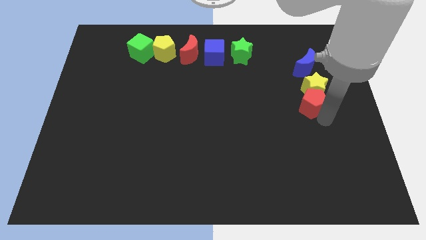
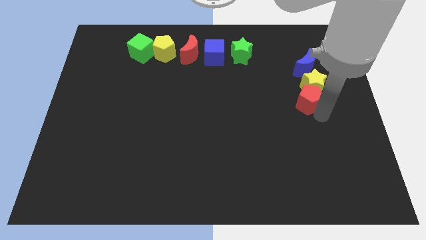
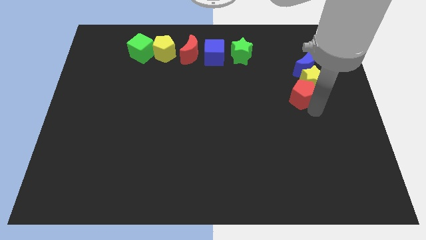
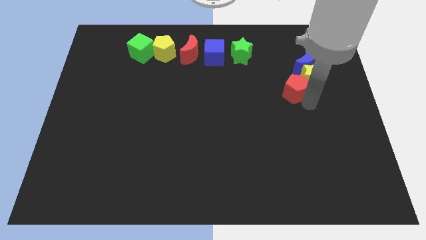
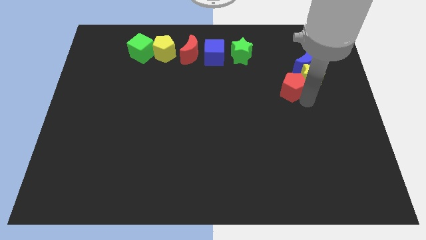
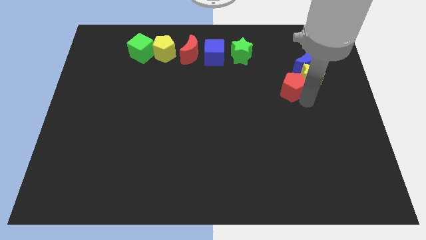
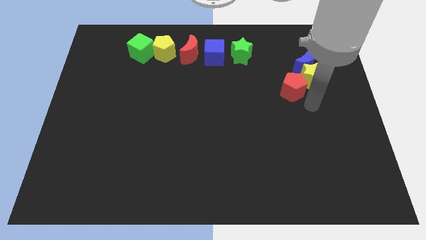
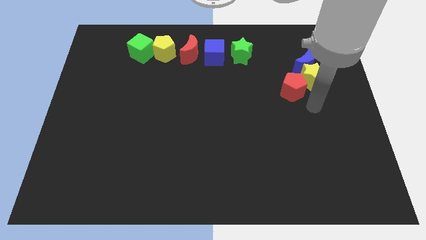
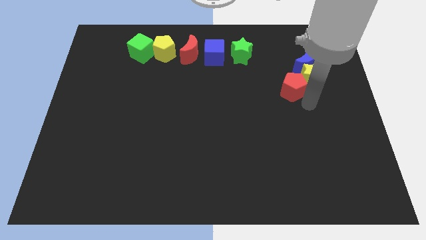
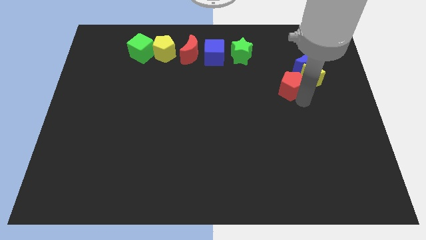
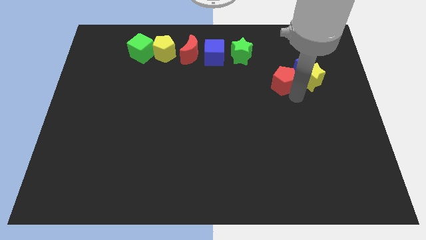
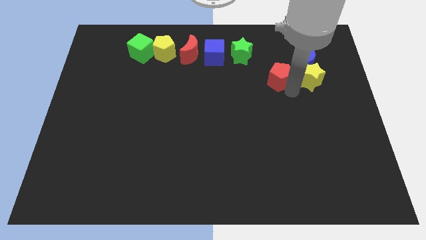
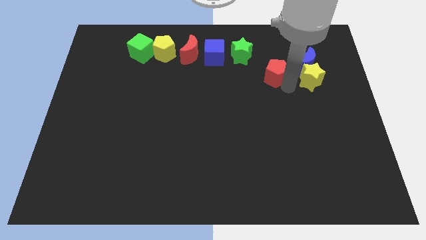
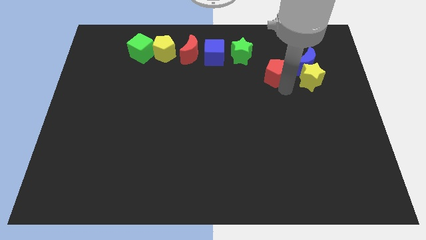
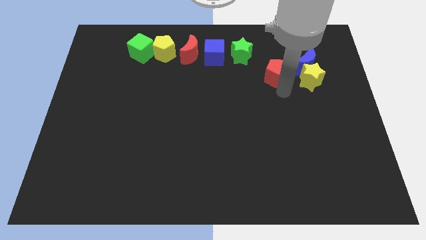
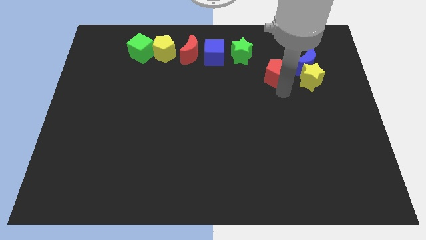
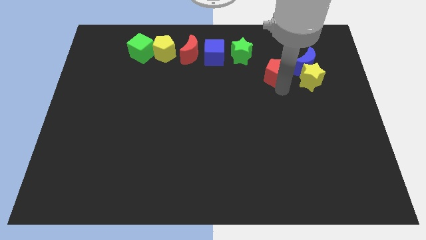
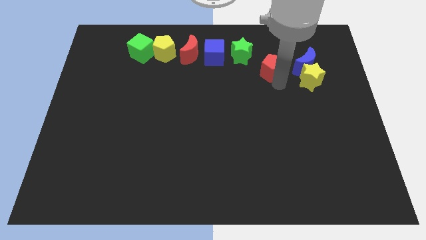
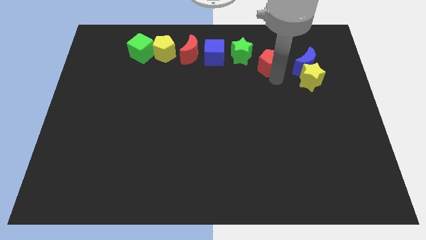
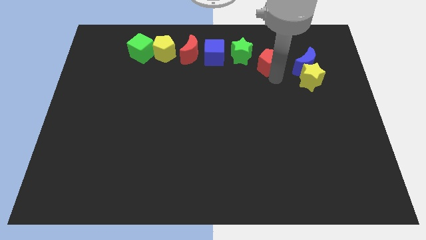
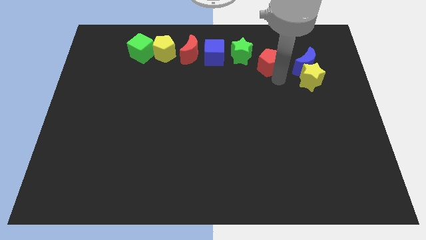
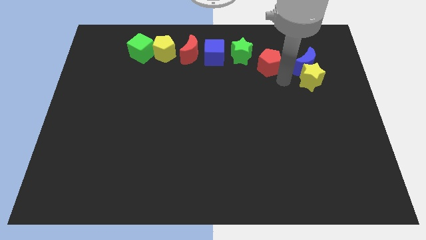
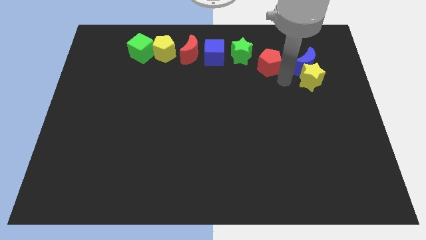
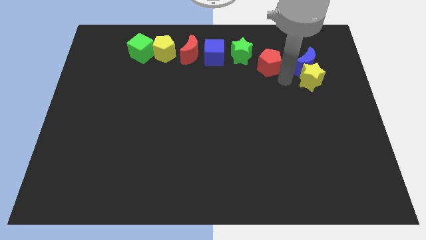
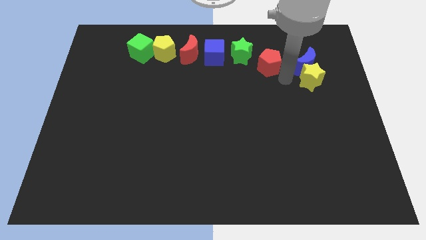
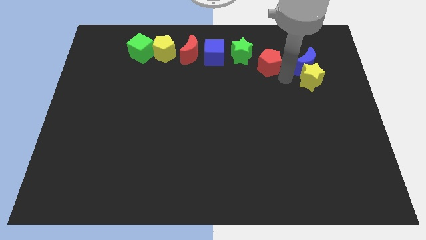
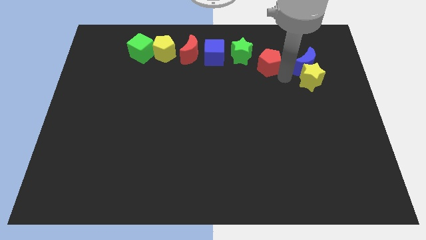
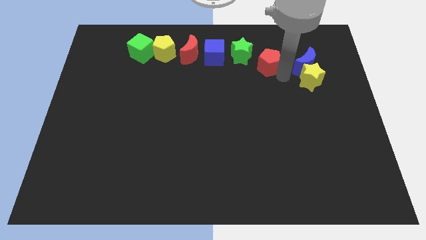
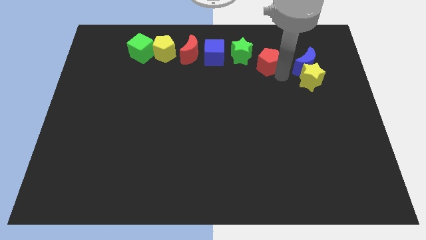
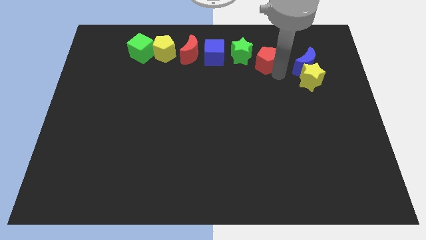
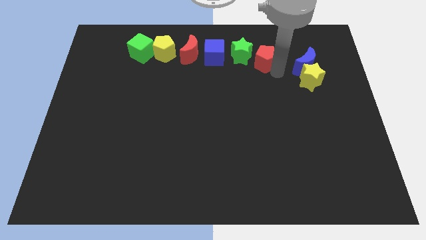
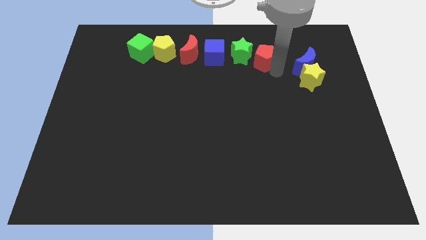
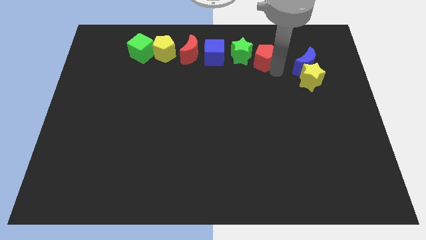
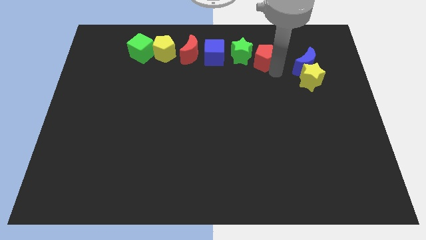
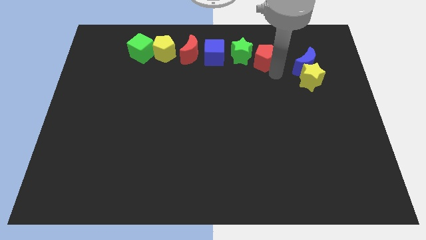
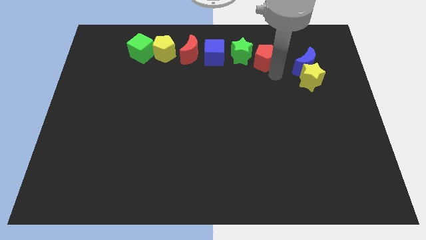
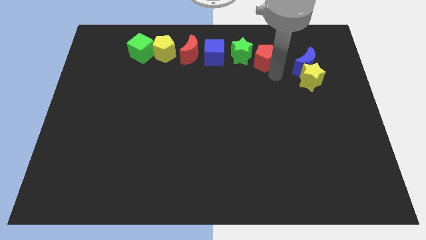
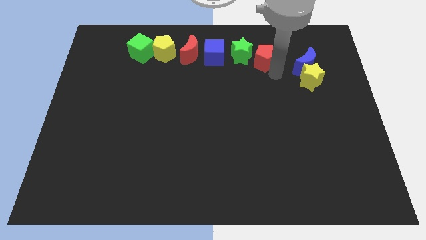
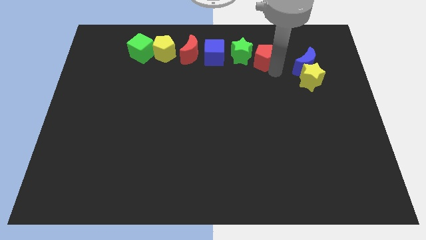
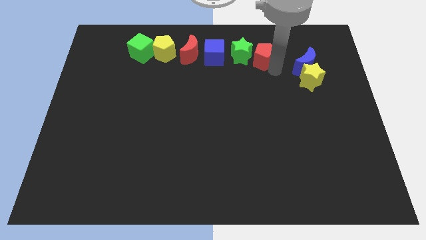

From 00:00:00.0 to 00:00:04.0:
move the red pentagon to the right of the green star

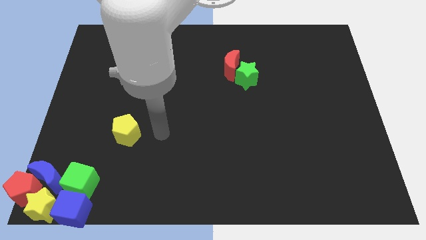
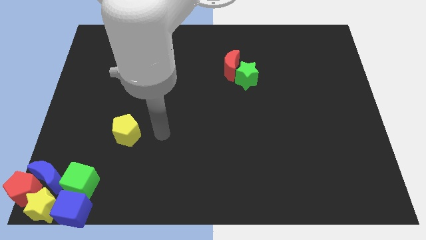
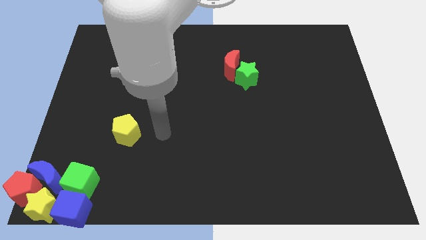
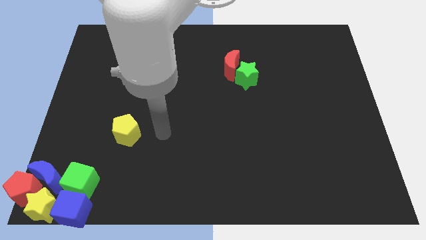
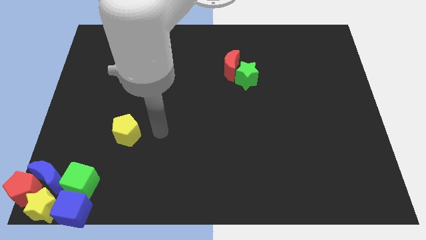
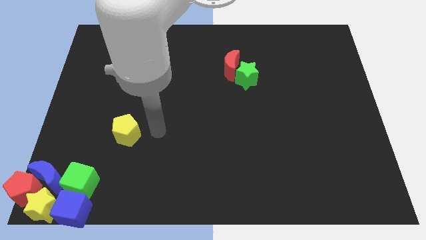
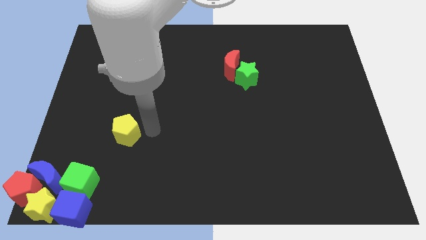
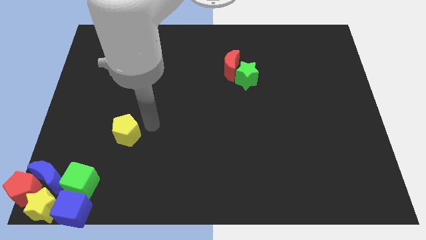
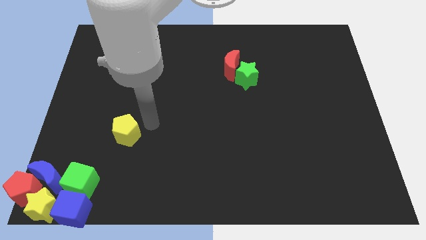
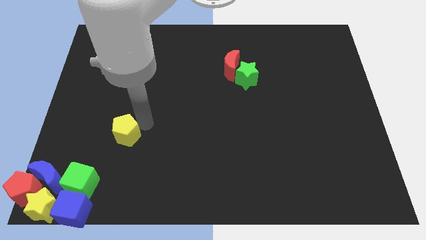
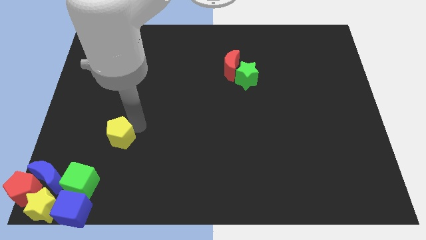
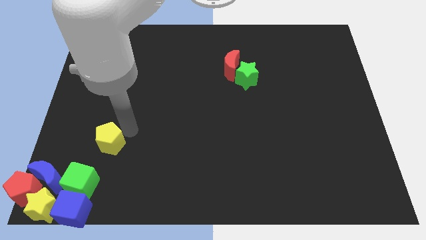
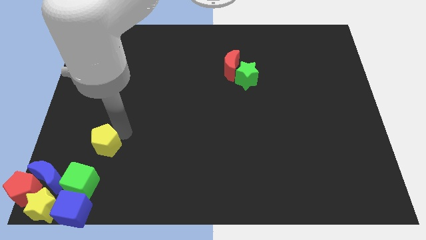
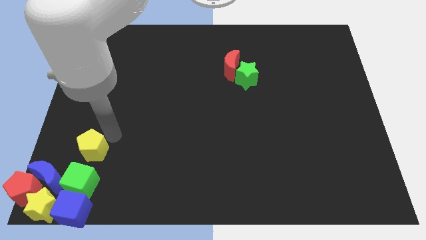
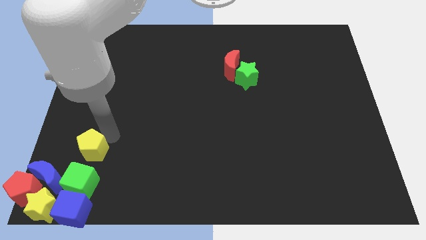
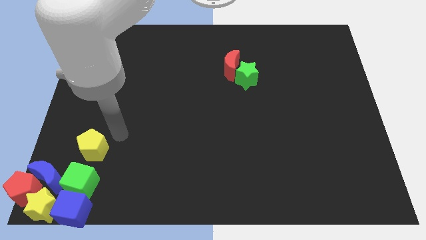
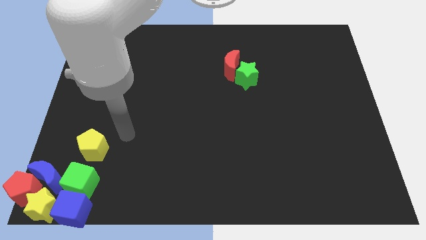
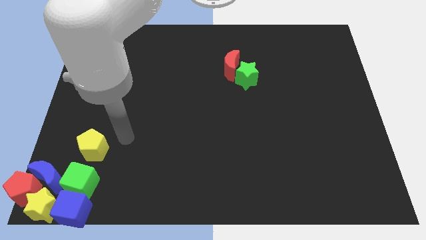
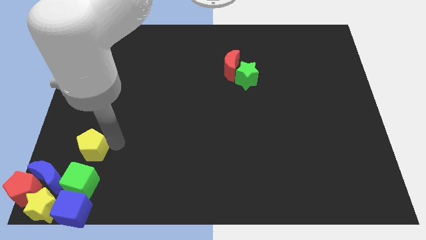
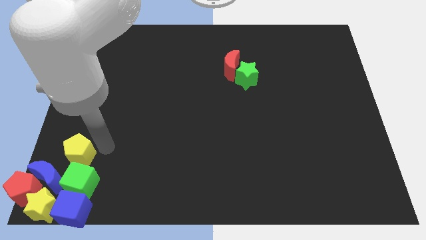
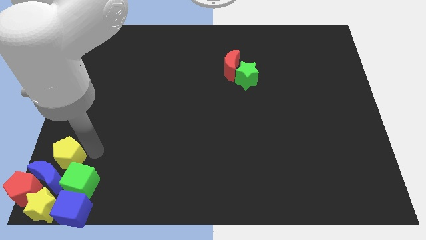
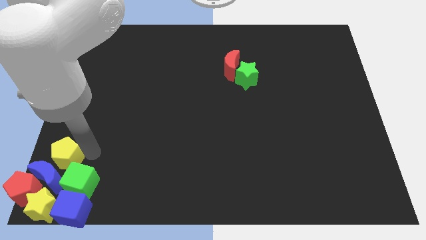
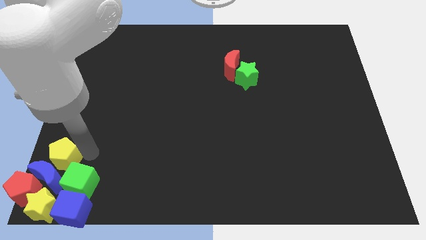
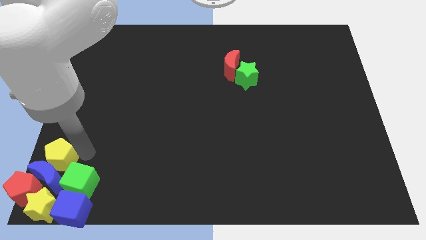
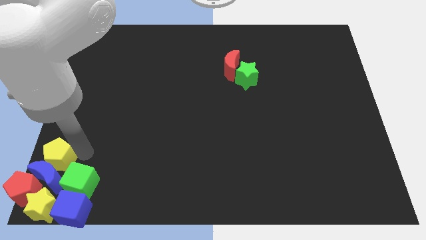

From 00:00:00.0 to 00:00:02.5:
move the yellow pentagon into the group of objects

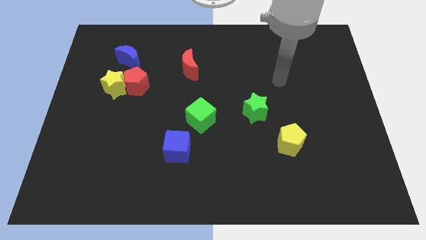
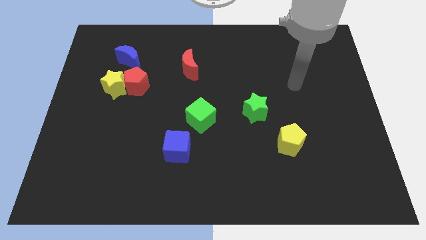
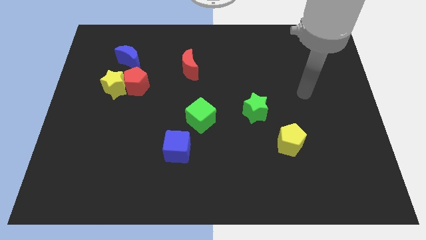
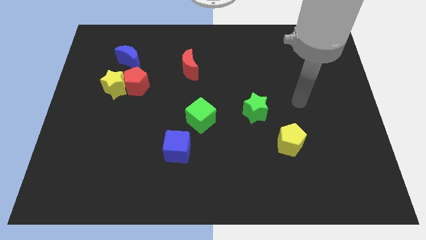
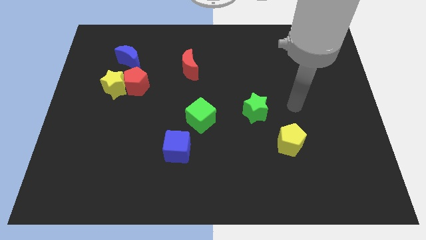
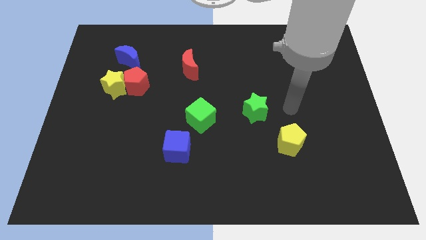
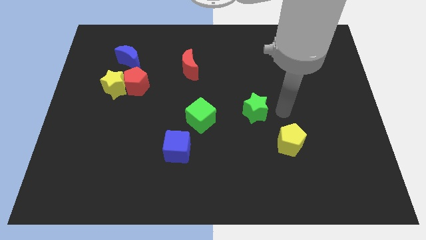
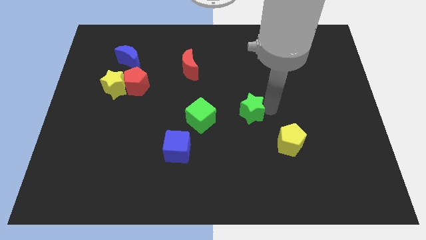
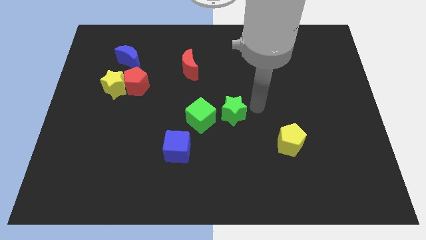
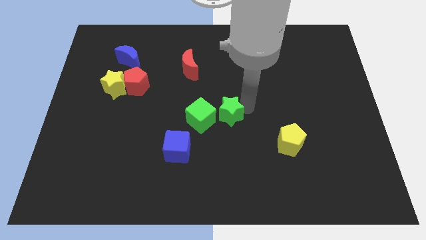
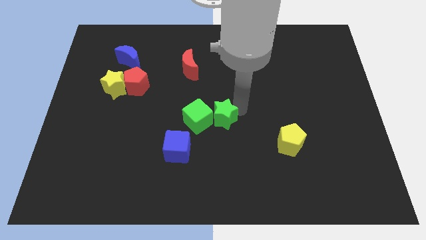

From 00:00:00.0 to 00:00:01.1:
slide green star into green cube

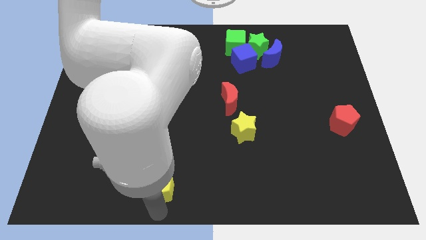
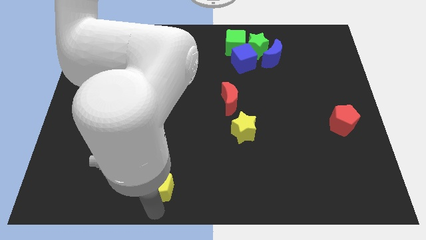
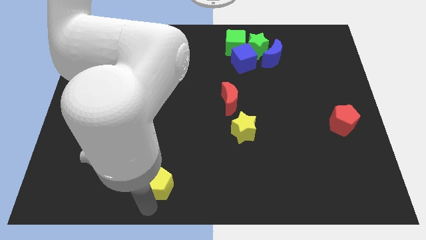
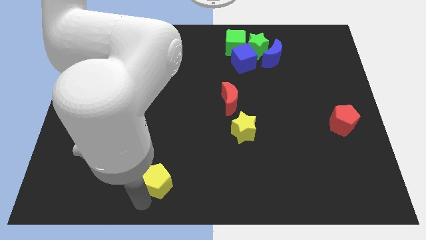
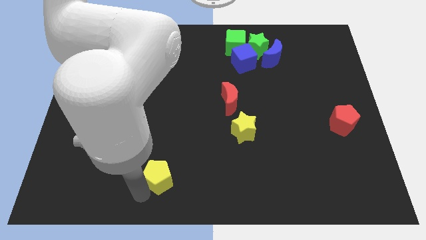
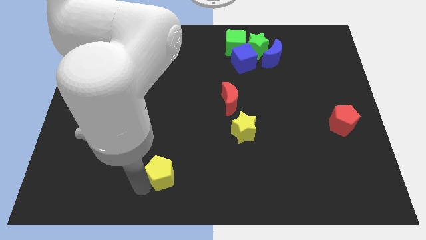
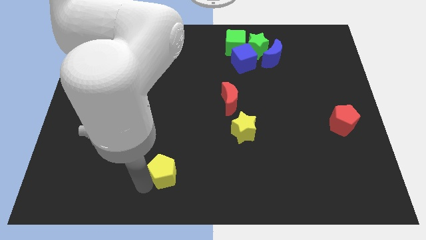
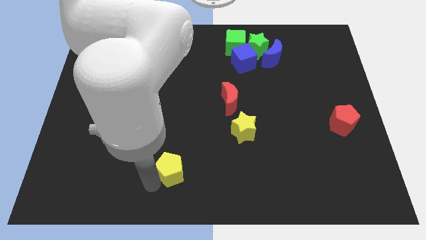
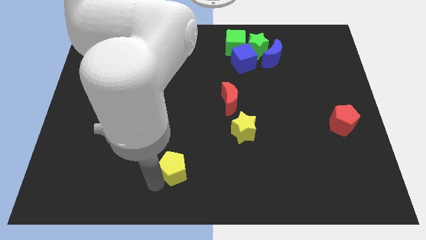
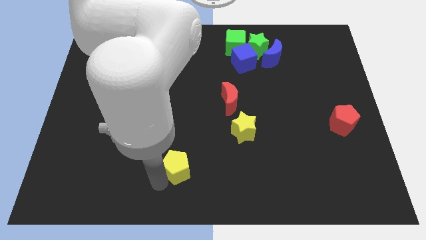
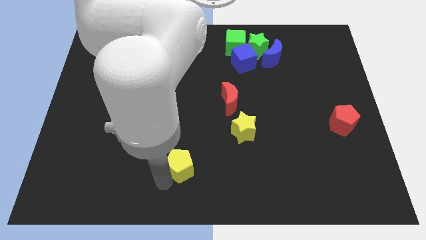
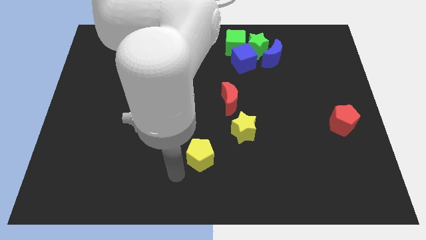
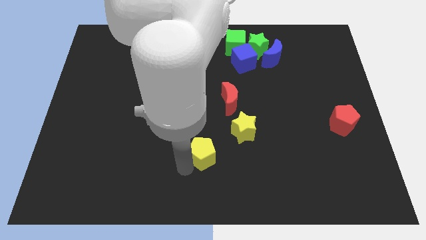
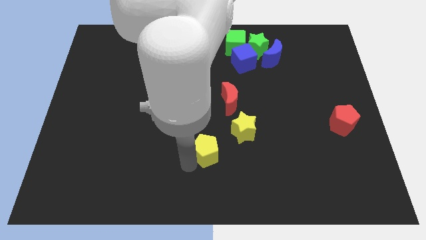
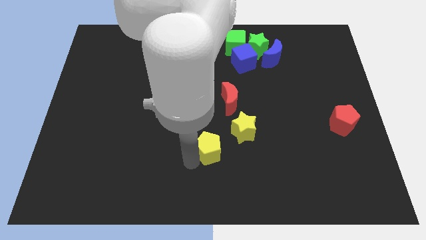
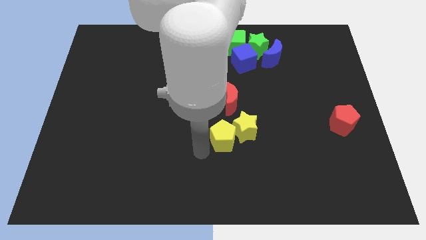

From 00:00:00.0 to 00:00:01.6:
place yellow pentagon to the left side of the yellow star
